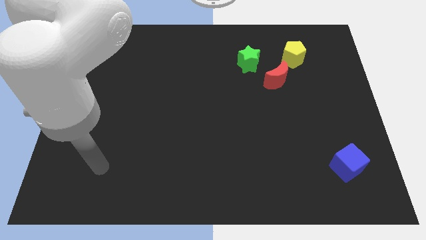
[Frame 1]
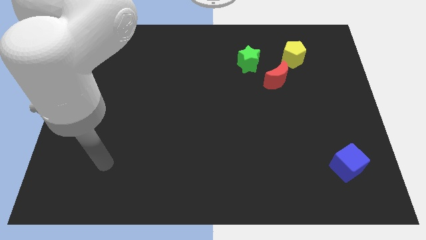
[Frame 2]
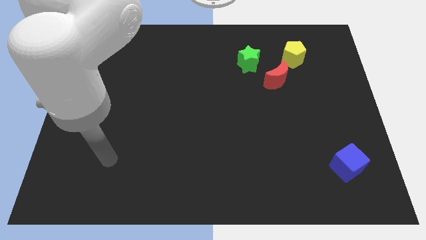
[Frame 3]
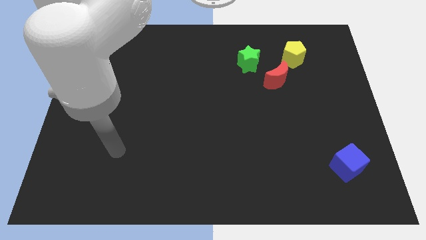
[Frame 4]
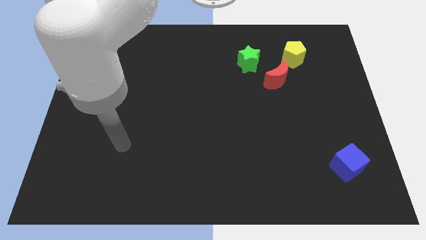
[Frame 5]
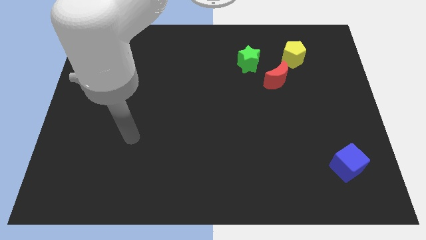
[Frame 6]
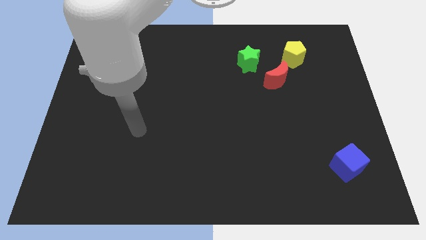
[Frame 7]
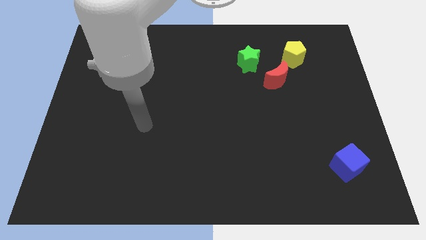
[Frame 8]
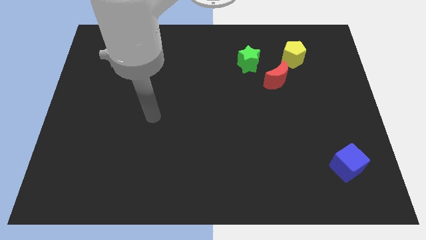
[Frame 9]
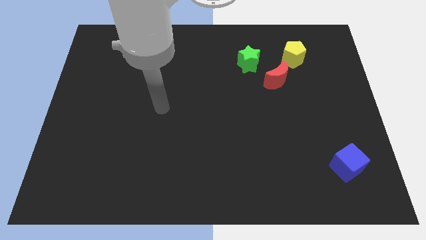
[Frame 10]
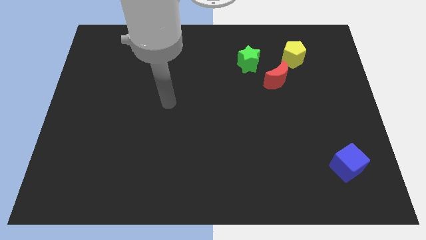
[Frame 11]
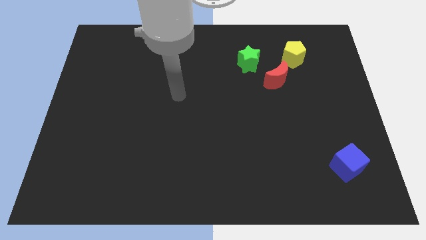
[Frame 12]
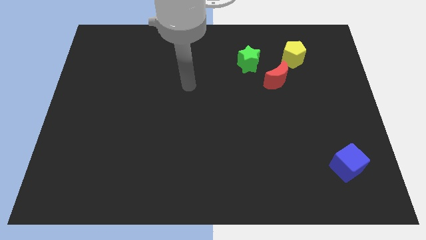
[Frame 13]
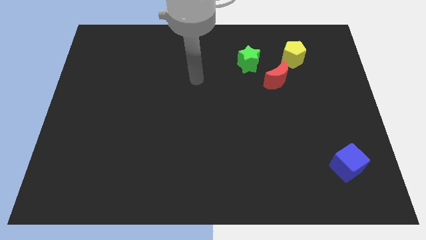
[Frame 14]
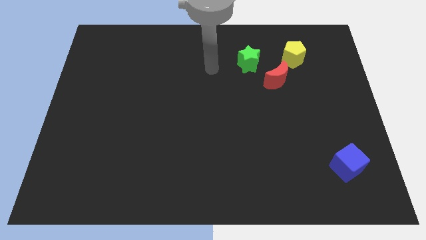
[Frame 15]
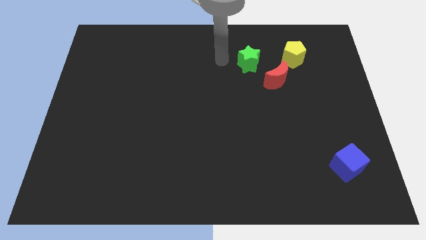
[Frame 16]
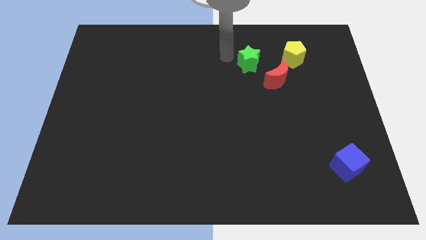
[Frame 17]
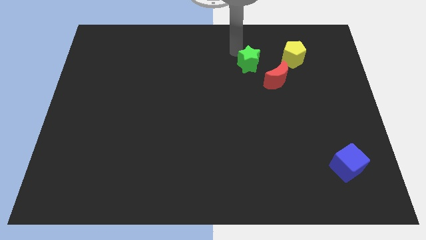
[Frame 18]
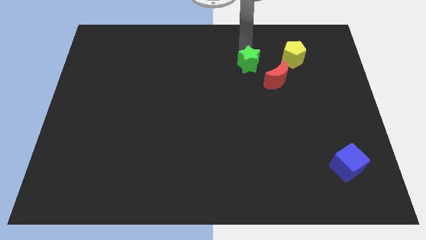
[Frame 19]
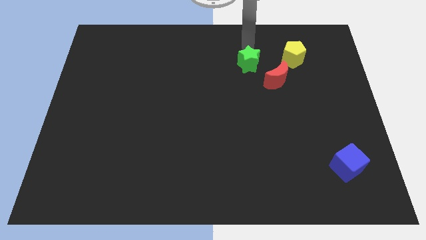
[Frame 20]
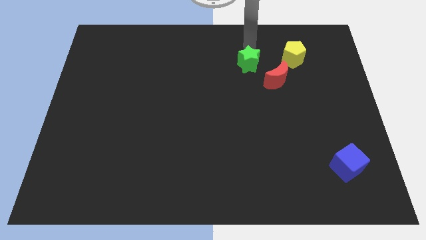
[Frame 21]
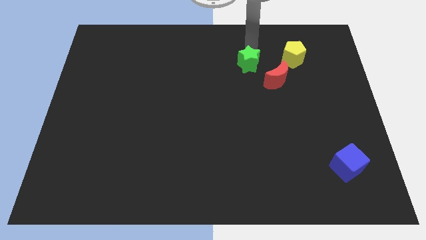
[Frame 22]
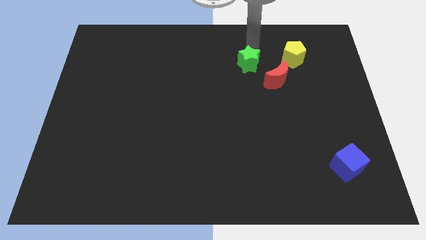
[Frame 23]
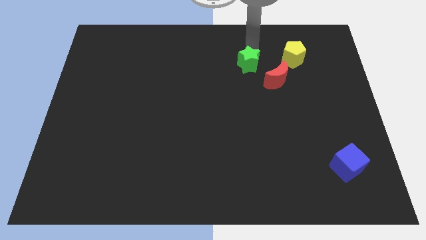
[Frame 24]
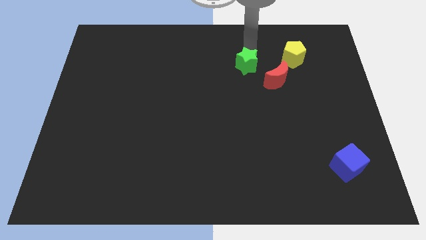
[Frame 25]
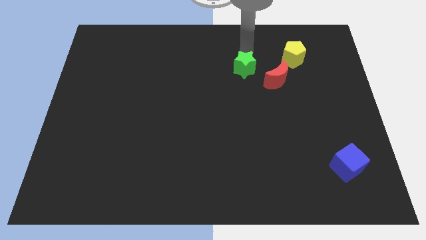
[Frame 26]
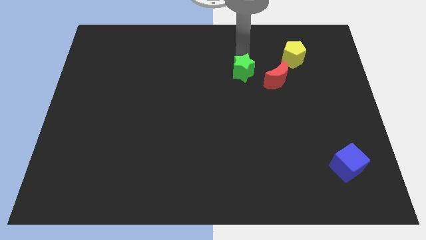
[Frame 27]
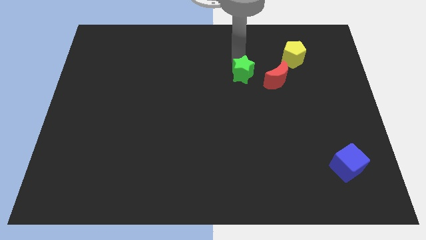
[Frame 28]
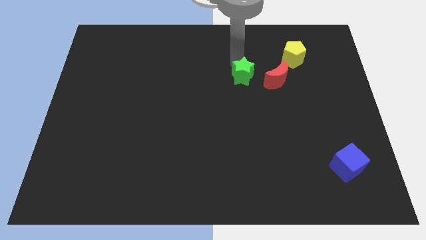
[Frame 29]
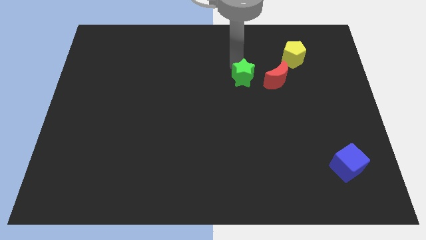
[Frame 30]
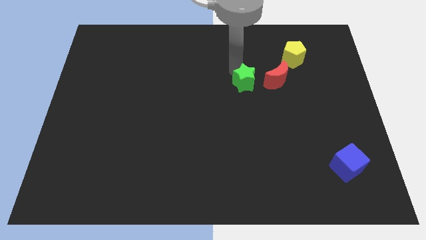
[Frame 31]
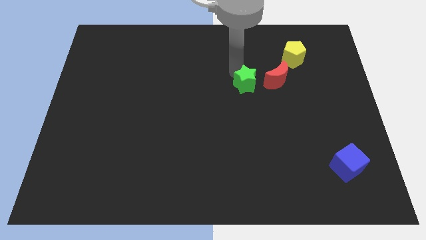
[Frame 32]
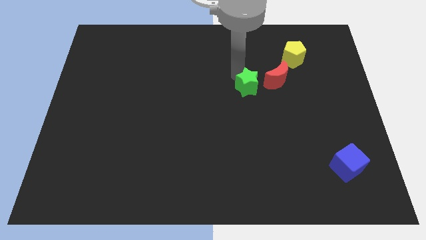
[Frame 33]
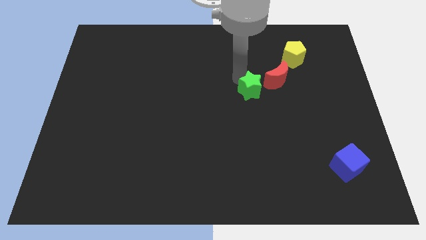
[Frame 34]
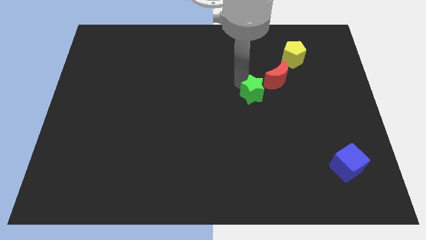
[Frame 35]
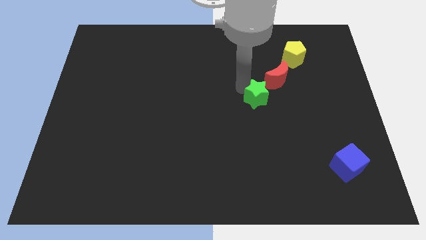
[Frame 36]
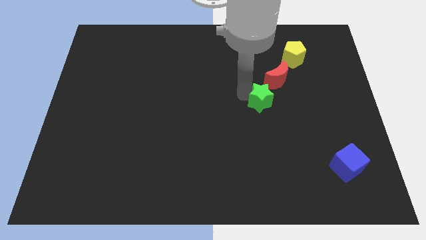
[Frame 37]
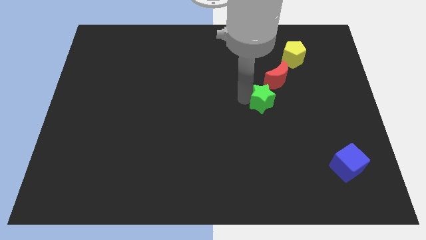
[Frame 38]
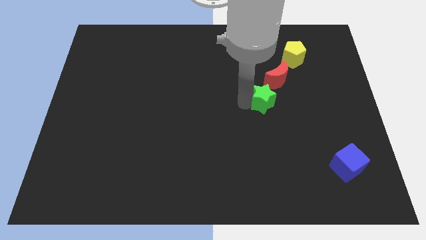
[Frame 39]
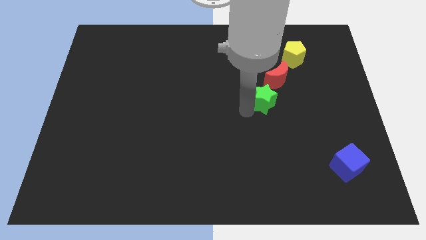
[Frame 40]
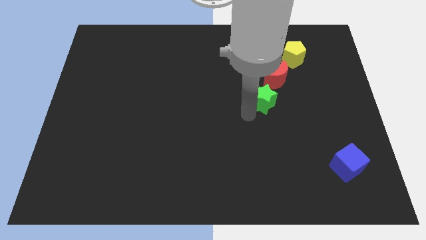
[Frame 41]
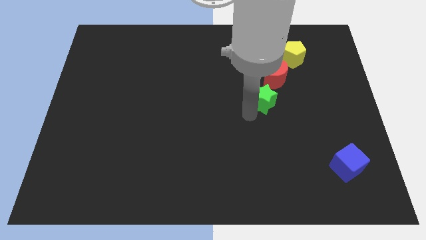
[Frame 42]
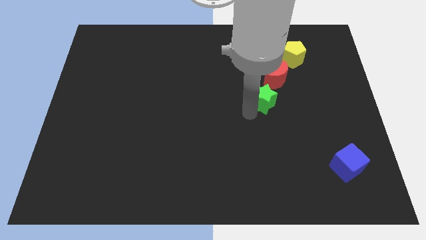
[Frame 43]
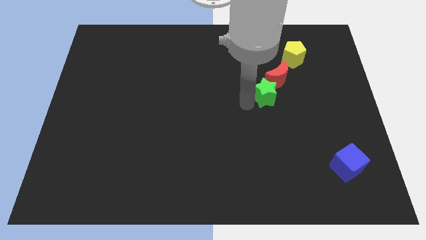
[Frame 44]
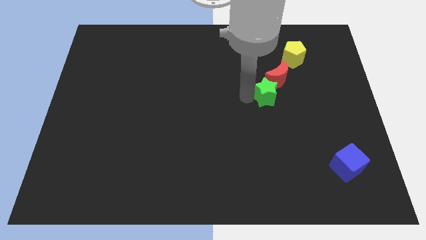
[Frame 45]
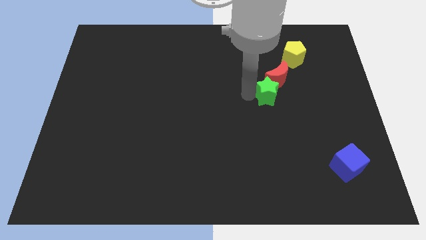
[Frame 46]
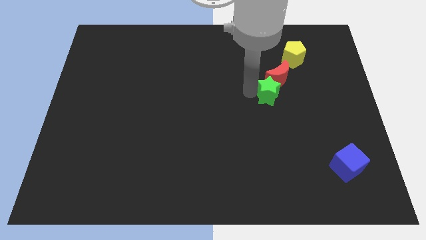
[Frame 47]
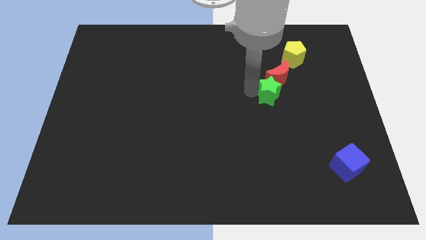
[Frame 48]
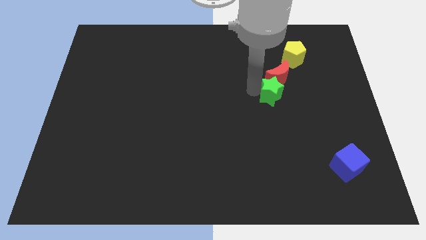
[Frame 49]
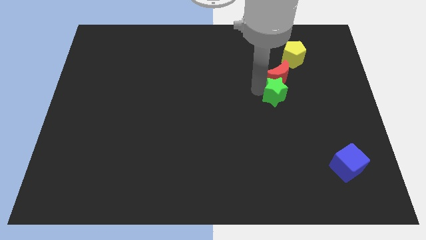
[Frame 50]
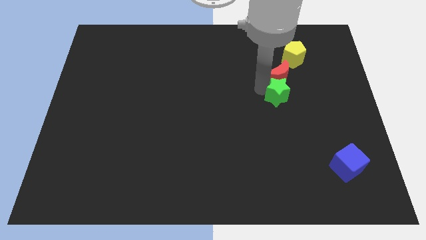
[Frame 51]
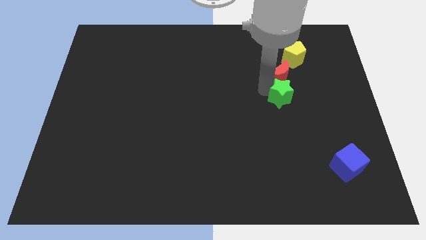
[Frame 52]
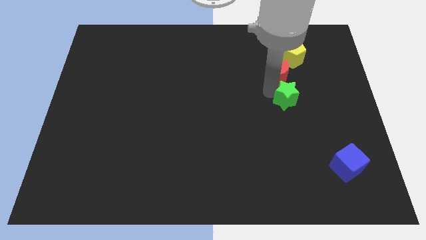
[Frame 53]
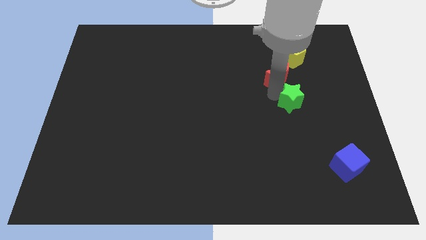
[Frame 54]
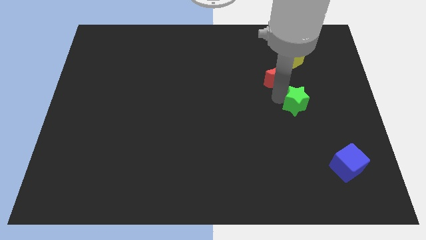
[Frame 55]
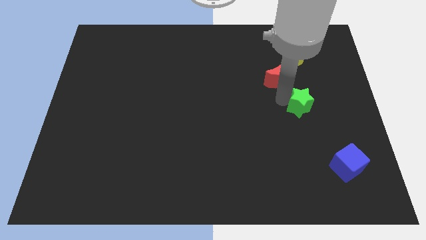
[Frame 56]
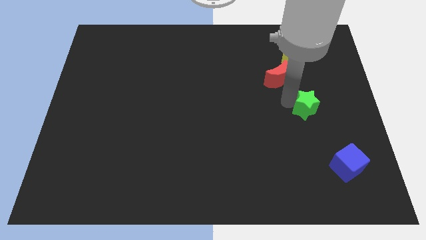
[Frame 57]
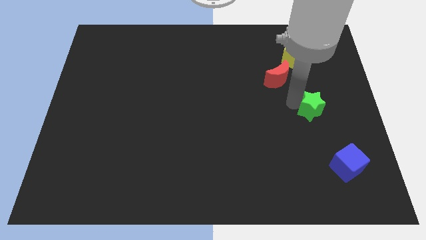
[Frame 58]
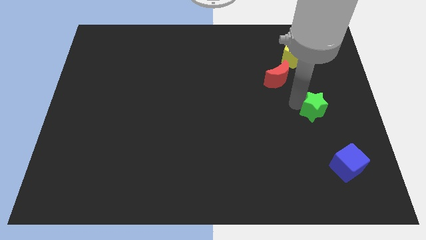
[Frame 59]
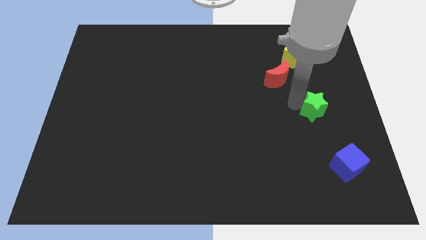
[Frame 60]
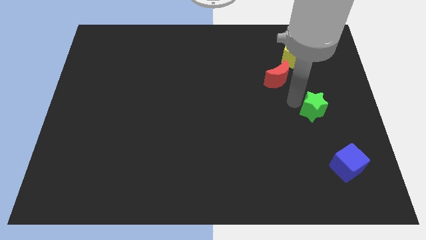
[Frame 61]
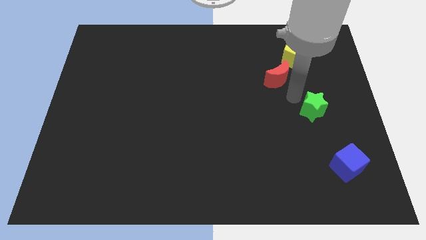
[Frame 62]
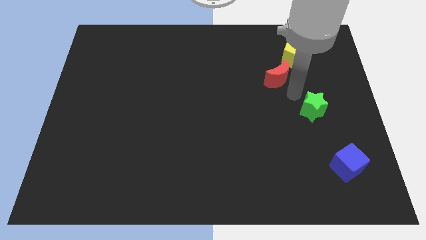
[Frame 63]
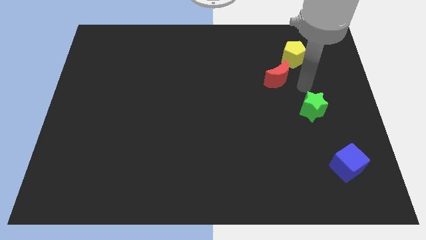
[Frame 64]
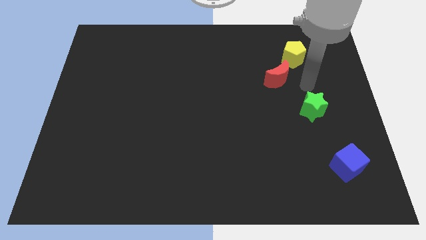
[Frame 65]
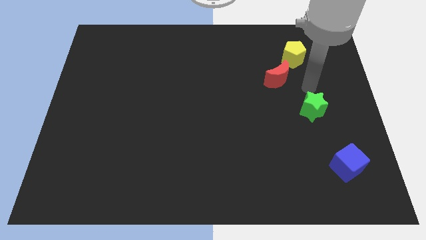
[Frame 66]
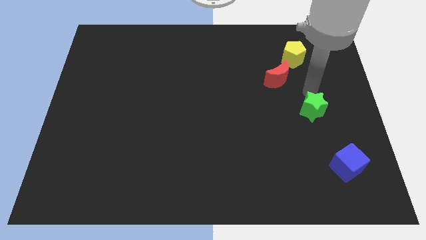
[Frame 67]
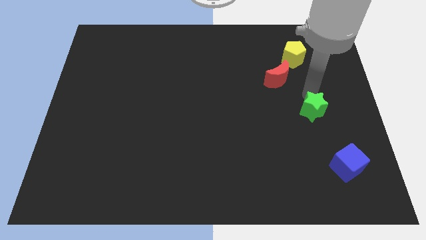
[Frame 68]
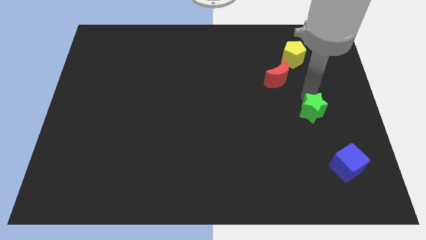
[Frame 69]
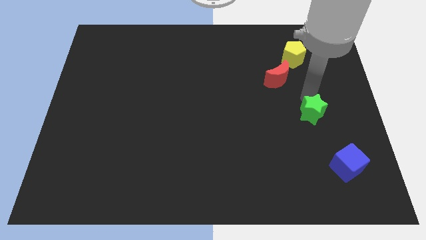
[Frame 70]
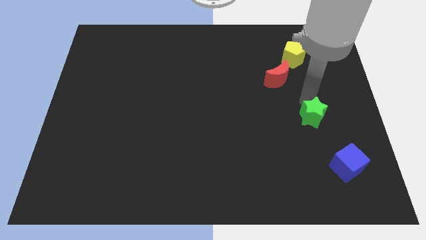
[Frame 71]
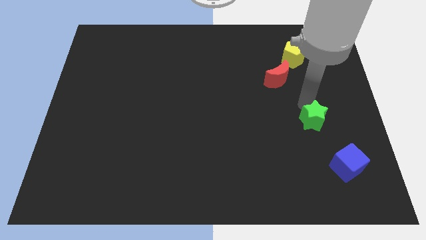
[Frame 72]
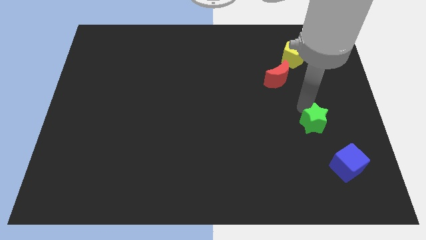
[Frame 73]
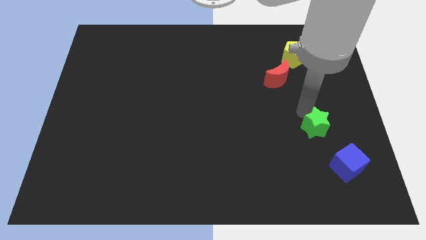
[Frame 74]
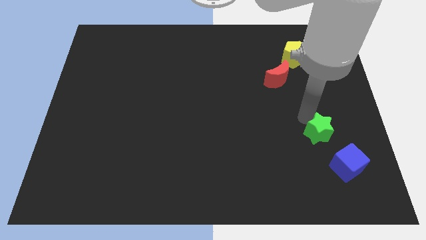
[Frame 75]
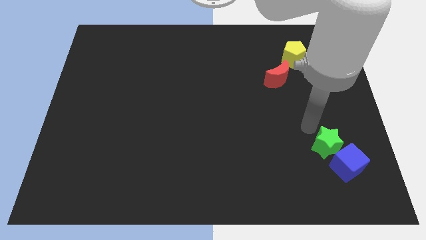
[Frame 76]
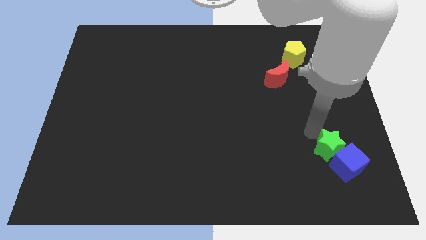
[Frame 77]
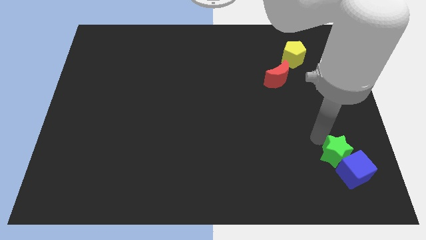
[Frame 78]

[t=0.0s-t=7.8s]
slide the star to the blue cube

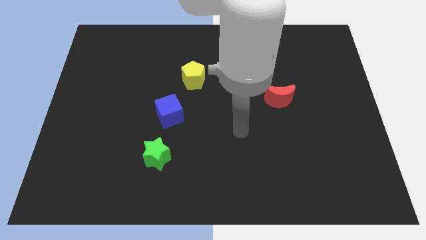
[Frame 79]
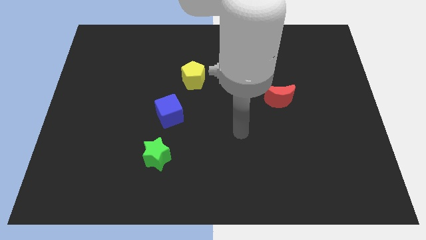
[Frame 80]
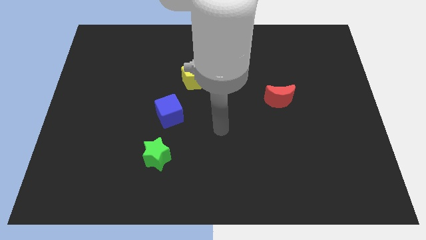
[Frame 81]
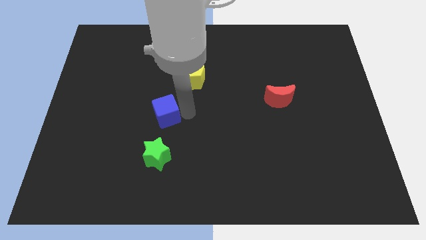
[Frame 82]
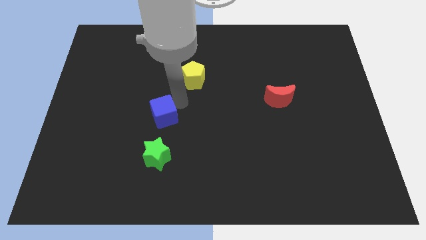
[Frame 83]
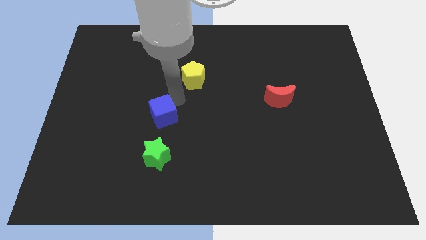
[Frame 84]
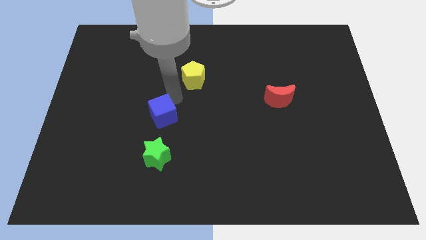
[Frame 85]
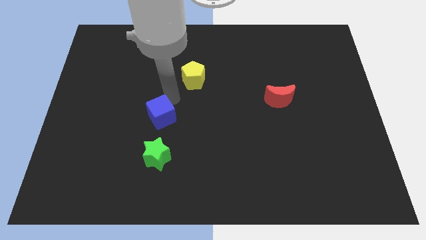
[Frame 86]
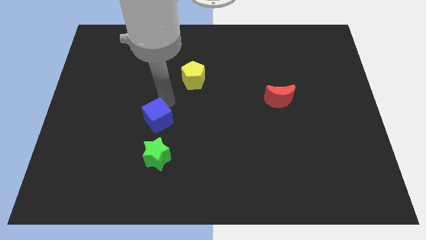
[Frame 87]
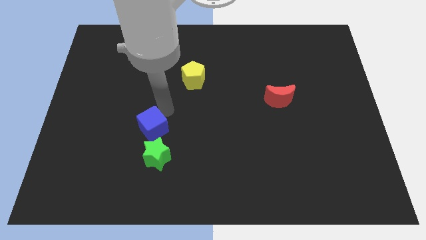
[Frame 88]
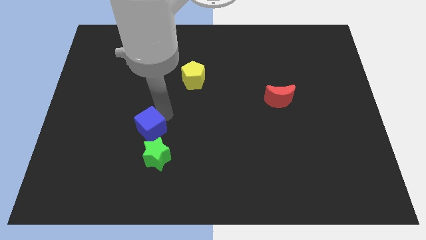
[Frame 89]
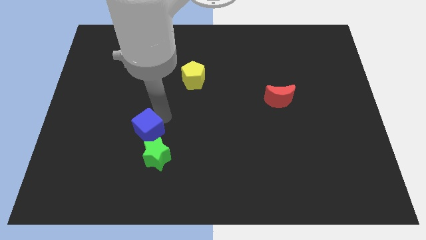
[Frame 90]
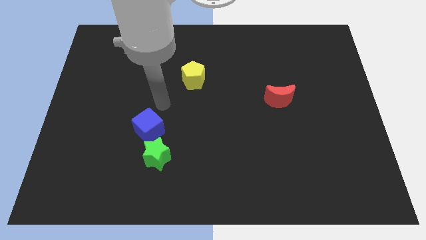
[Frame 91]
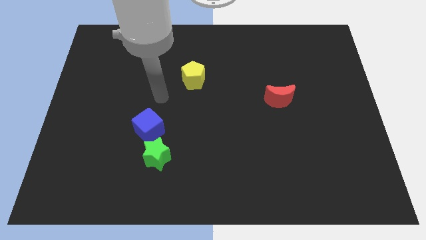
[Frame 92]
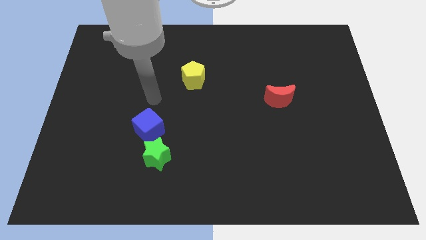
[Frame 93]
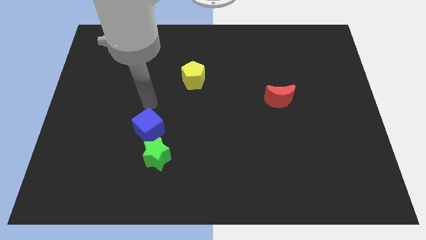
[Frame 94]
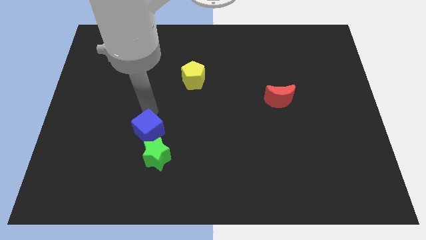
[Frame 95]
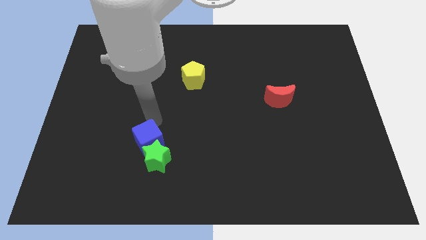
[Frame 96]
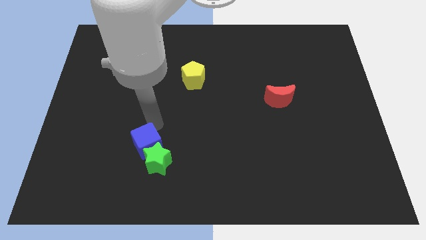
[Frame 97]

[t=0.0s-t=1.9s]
push the blue cube to the green block
